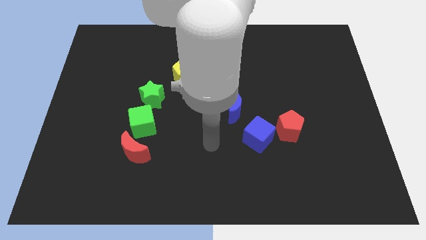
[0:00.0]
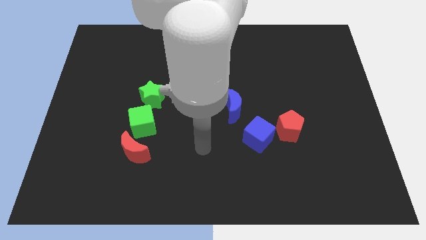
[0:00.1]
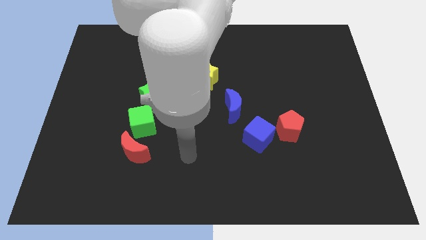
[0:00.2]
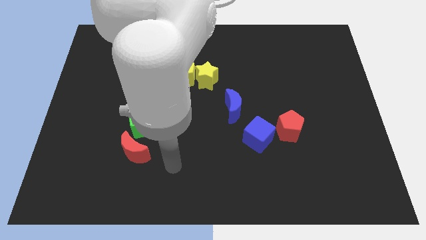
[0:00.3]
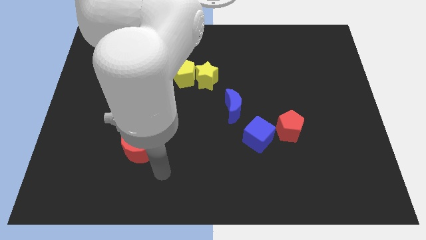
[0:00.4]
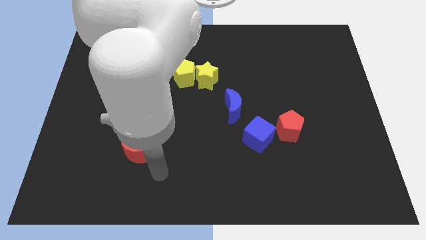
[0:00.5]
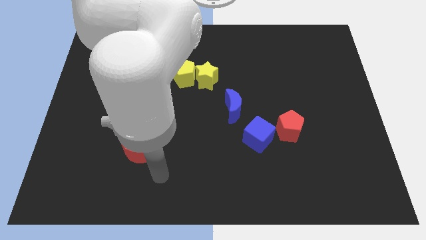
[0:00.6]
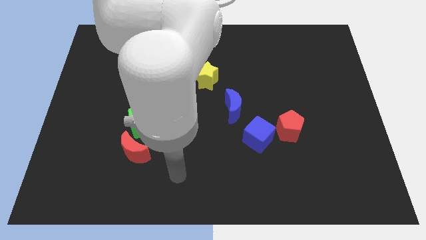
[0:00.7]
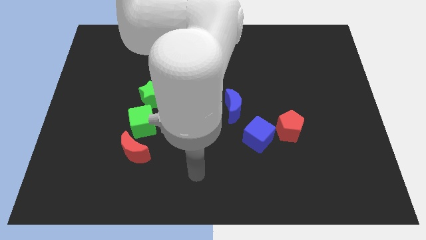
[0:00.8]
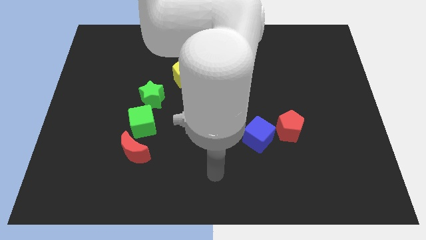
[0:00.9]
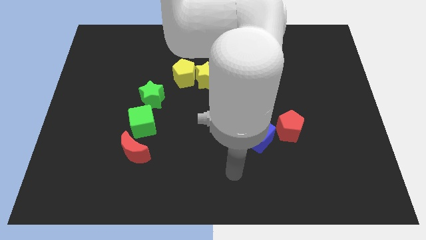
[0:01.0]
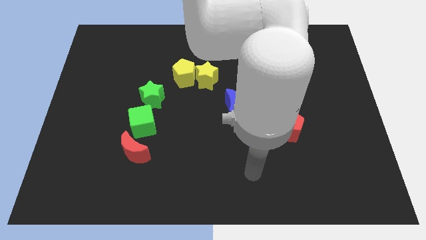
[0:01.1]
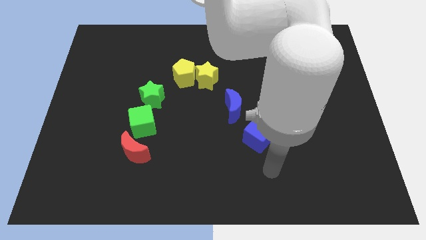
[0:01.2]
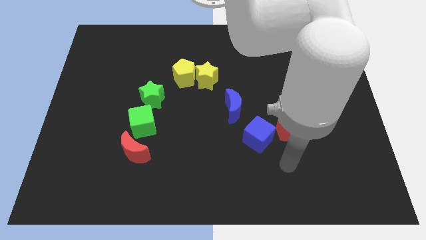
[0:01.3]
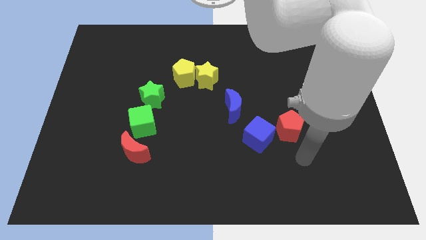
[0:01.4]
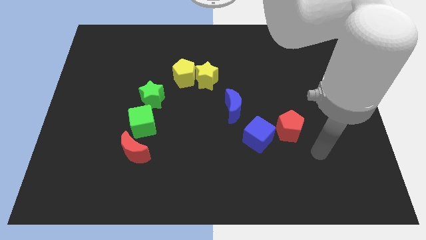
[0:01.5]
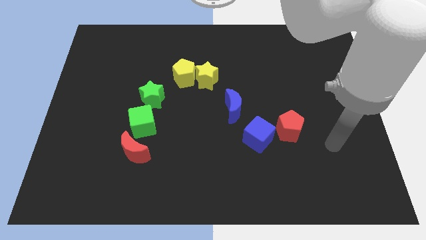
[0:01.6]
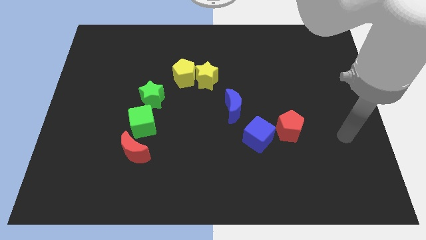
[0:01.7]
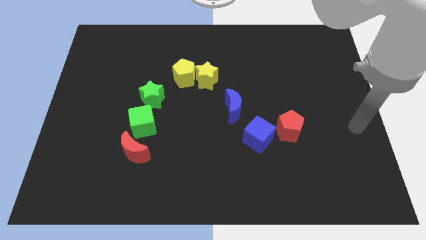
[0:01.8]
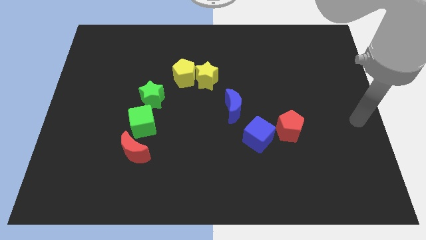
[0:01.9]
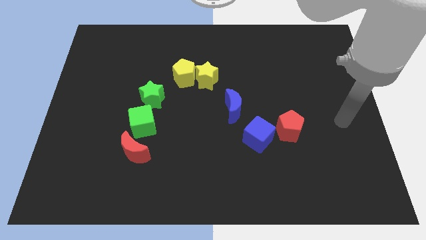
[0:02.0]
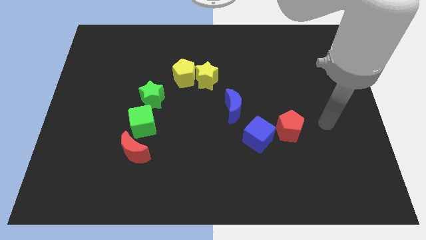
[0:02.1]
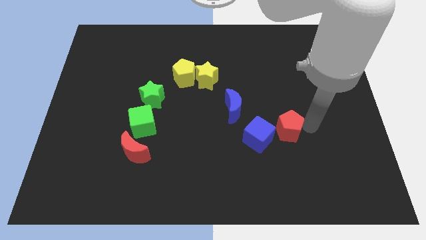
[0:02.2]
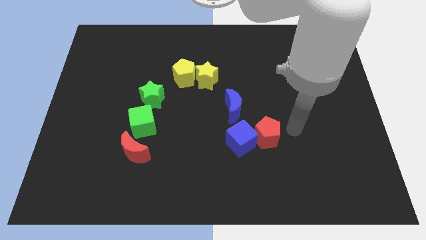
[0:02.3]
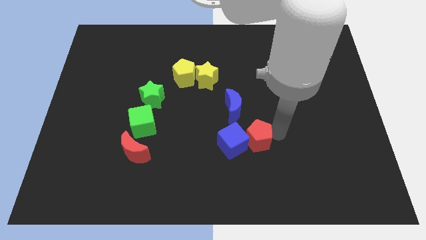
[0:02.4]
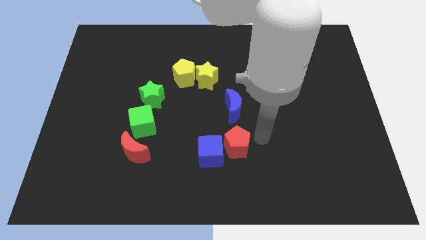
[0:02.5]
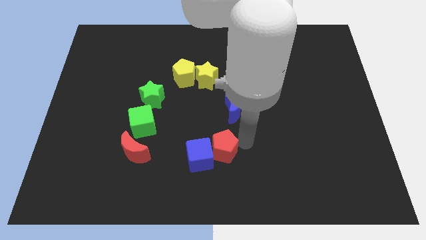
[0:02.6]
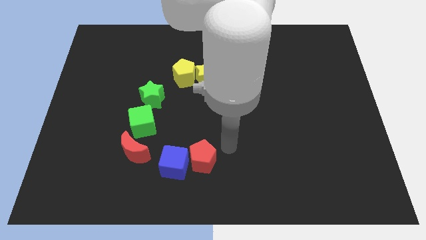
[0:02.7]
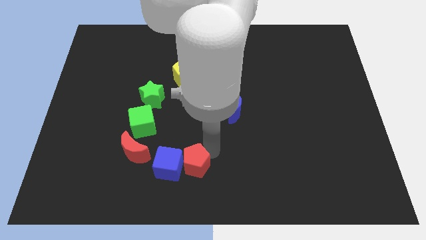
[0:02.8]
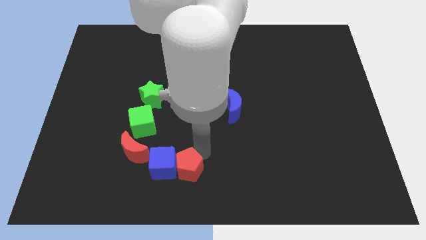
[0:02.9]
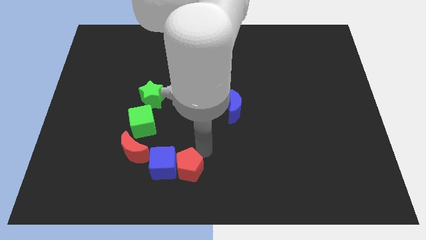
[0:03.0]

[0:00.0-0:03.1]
move red pentagon and blue cube right beside the red moon

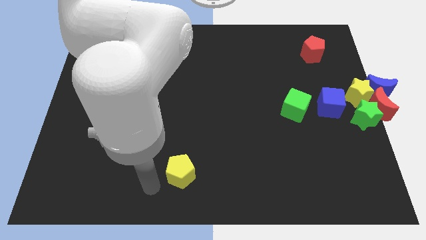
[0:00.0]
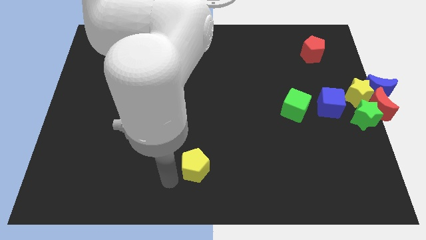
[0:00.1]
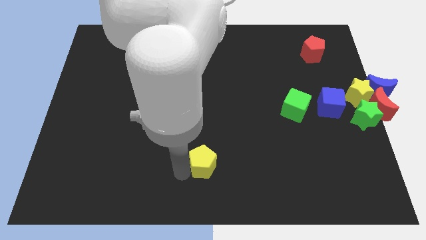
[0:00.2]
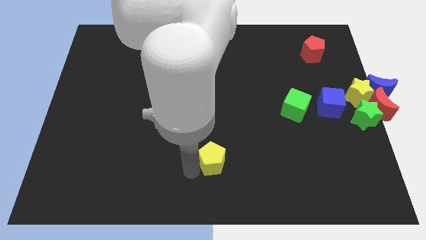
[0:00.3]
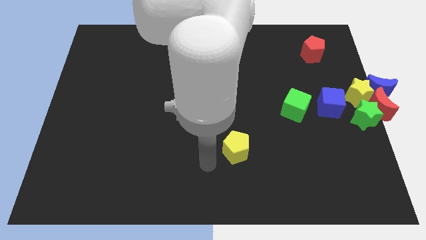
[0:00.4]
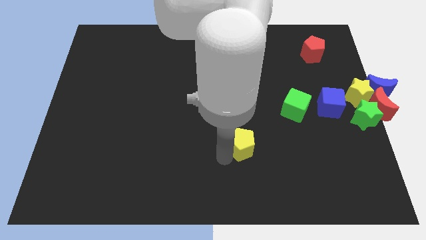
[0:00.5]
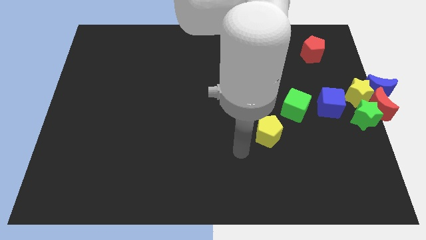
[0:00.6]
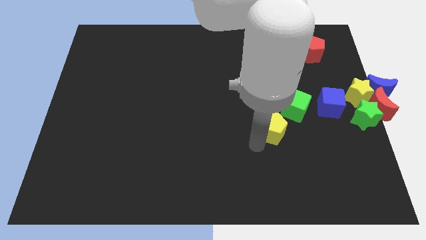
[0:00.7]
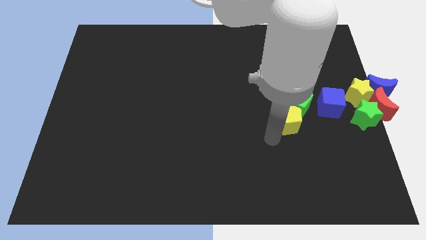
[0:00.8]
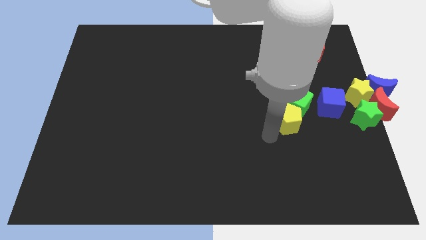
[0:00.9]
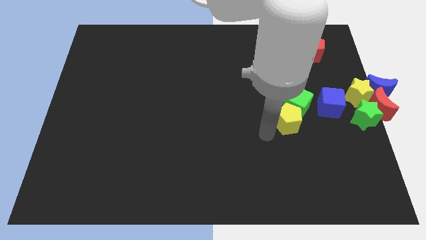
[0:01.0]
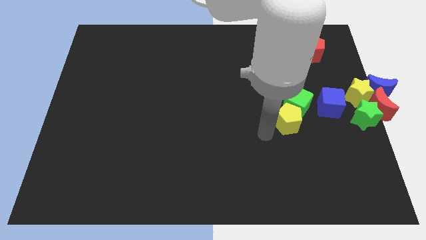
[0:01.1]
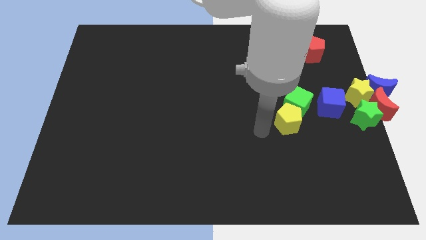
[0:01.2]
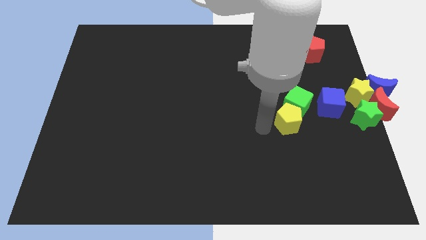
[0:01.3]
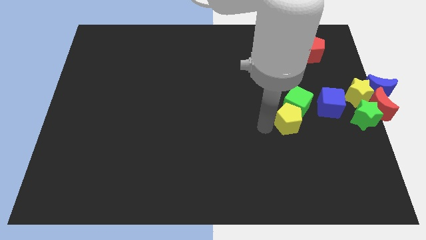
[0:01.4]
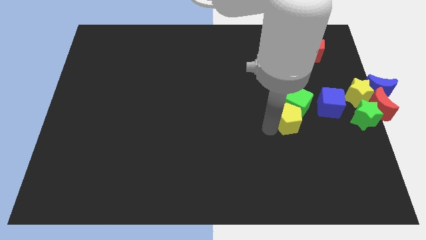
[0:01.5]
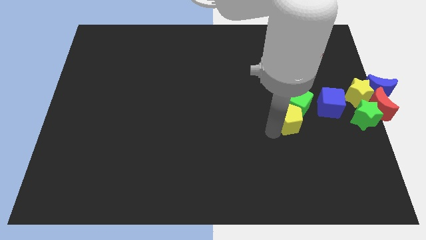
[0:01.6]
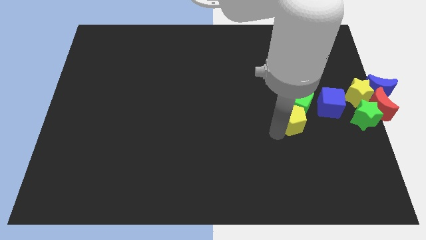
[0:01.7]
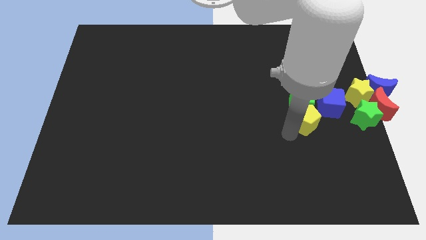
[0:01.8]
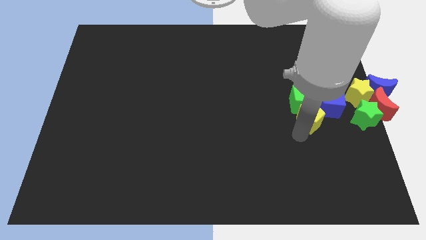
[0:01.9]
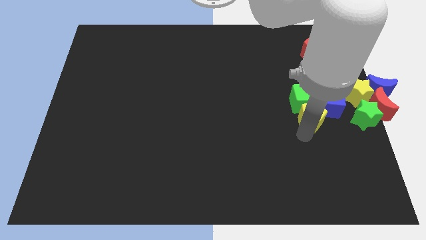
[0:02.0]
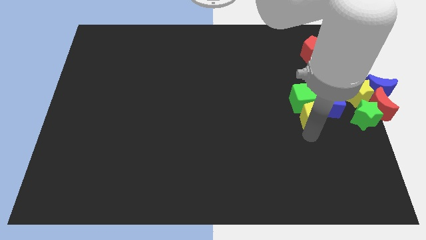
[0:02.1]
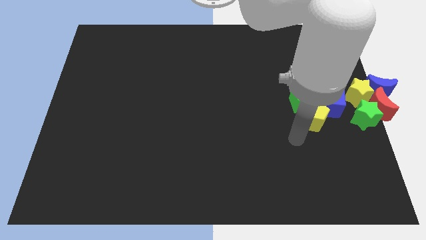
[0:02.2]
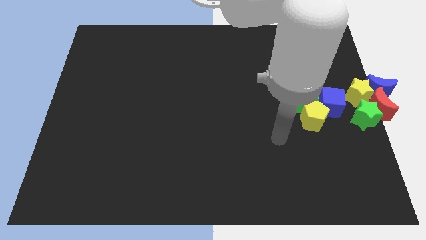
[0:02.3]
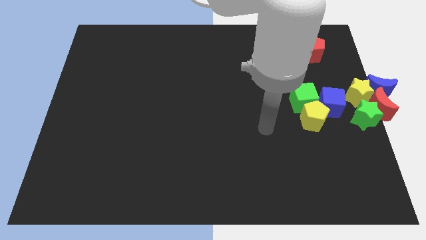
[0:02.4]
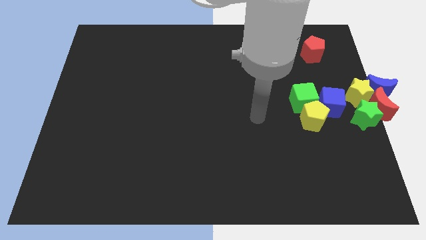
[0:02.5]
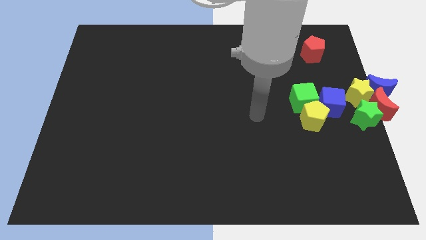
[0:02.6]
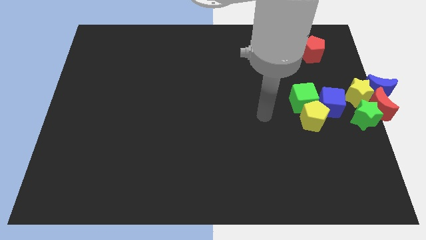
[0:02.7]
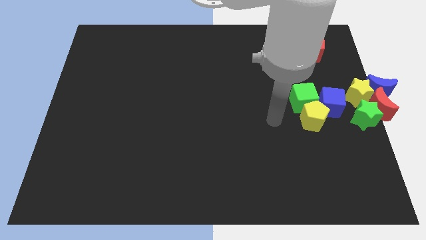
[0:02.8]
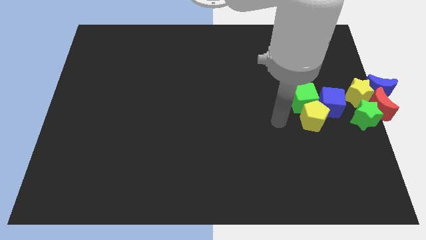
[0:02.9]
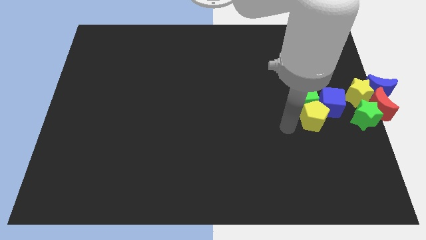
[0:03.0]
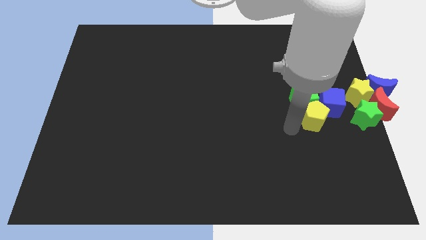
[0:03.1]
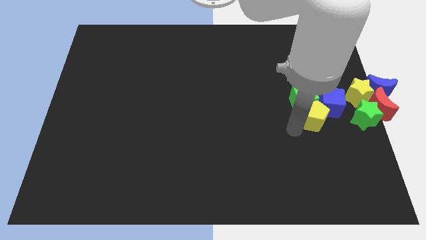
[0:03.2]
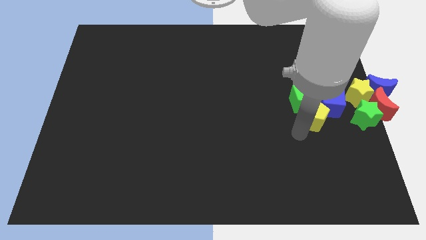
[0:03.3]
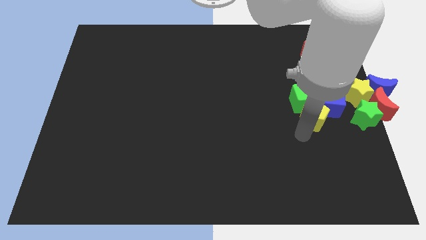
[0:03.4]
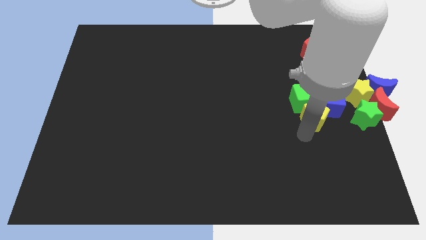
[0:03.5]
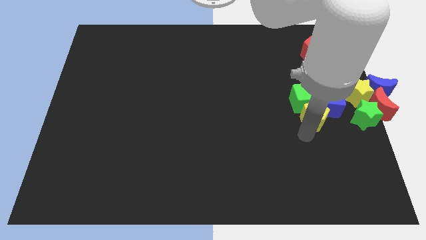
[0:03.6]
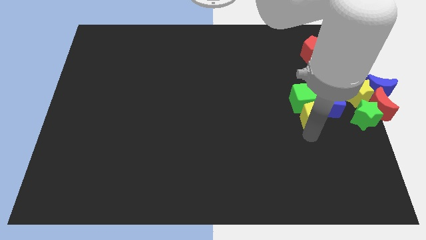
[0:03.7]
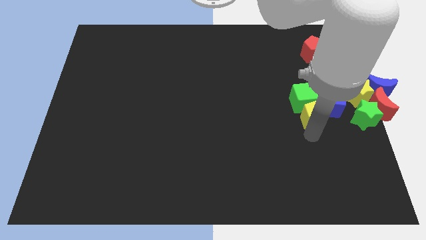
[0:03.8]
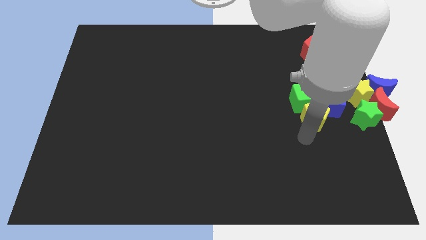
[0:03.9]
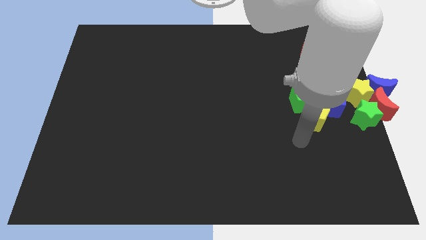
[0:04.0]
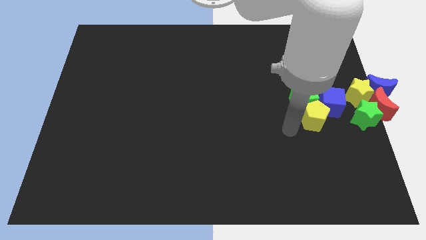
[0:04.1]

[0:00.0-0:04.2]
move the yellow pentagon close to the bottom of the green cube

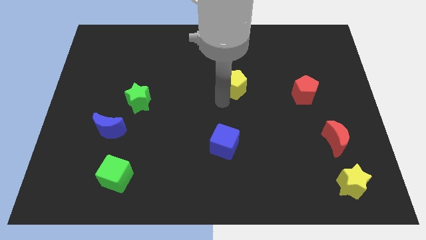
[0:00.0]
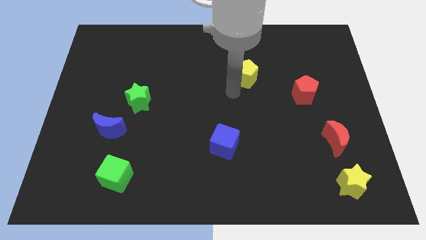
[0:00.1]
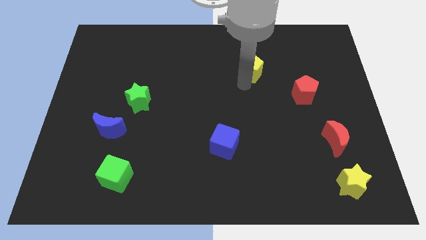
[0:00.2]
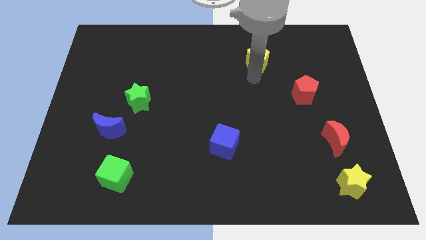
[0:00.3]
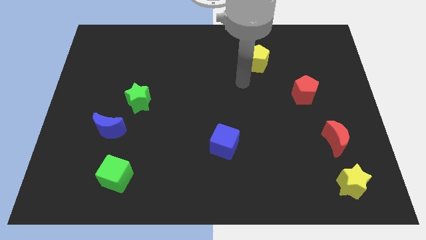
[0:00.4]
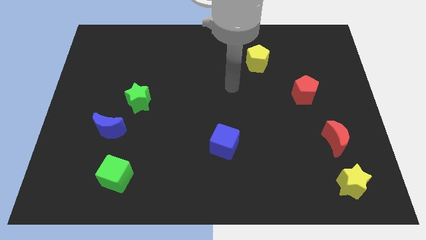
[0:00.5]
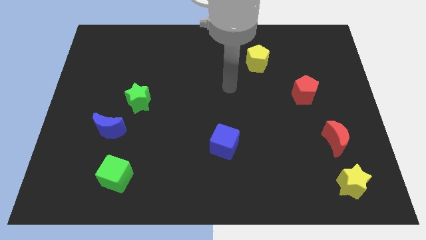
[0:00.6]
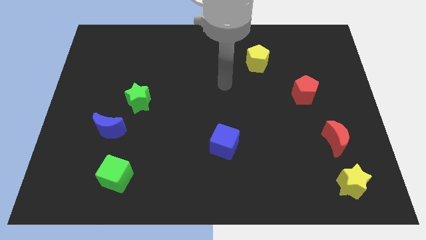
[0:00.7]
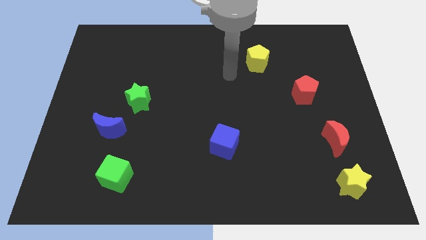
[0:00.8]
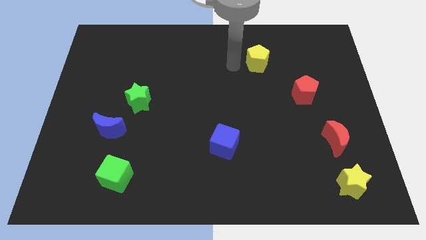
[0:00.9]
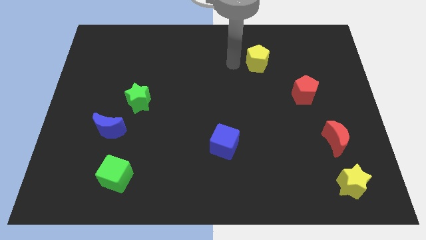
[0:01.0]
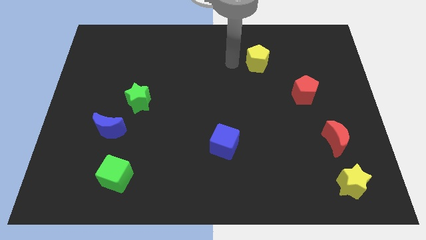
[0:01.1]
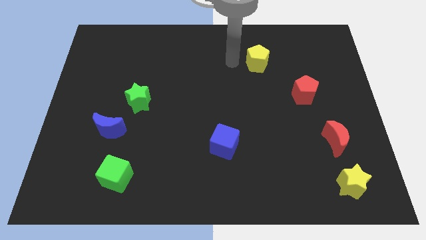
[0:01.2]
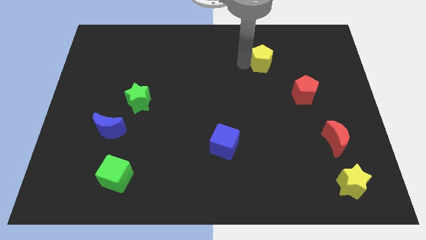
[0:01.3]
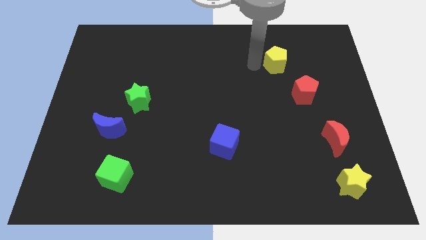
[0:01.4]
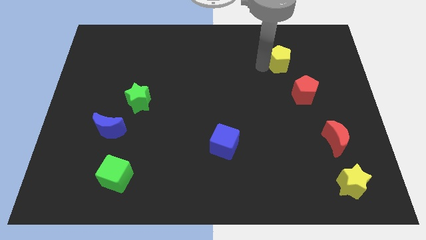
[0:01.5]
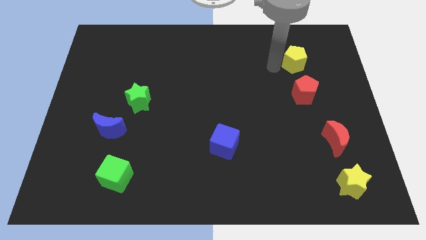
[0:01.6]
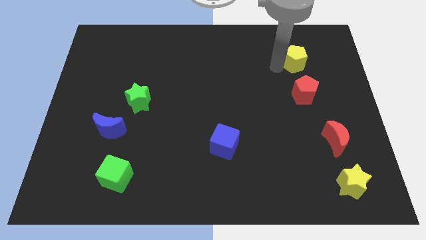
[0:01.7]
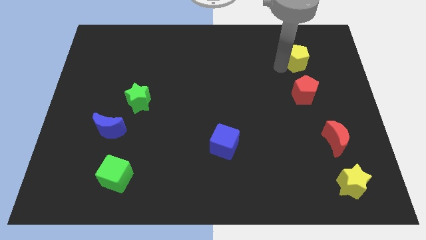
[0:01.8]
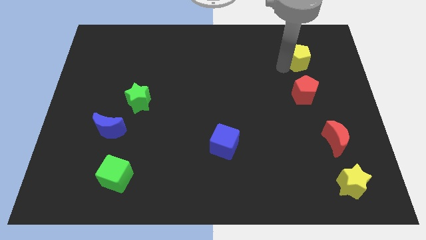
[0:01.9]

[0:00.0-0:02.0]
push the yellow pentagon to the top of the red pentagon
